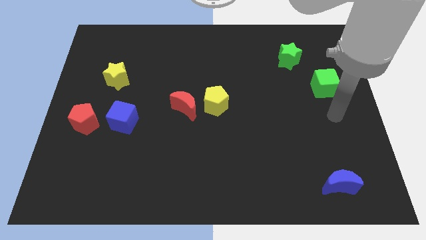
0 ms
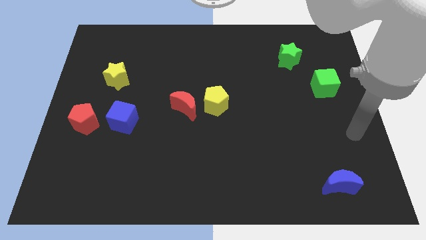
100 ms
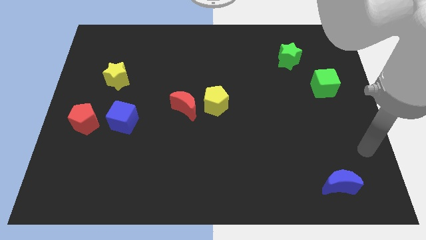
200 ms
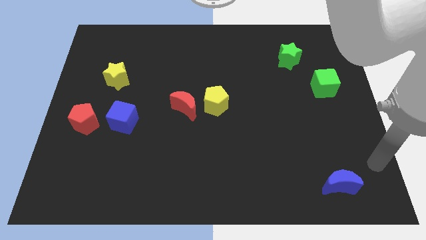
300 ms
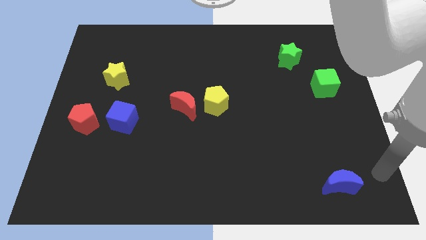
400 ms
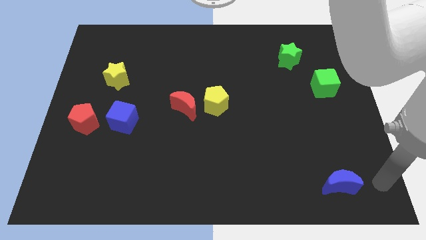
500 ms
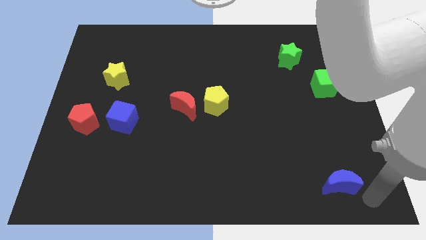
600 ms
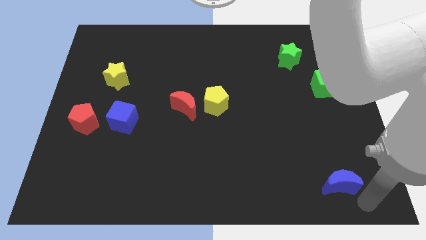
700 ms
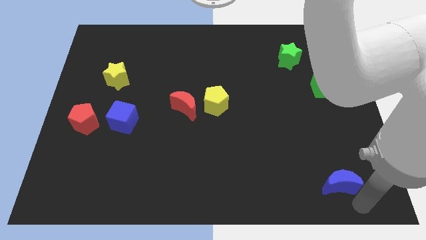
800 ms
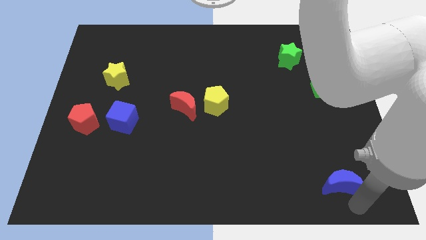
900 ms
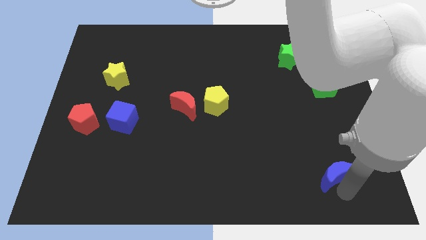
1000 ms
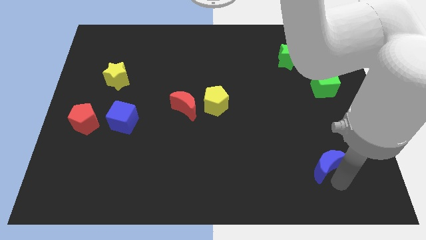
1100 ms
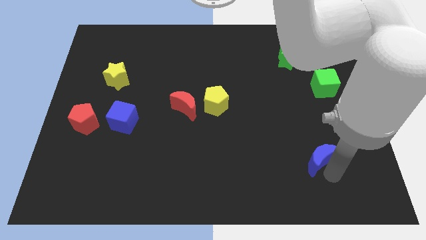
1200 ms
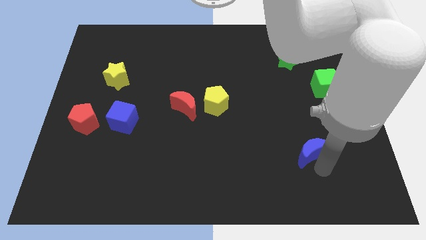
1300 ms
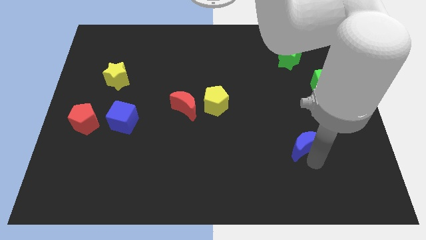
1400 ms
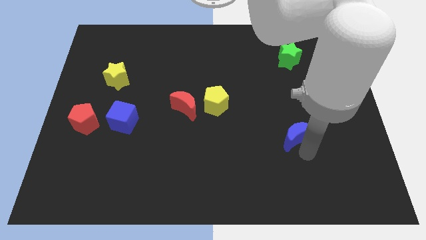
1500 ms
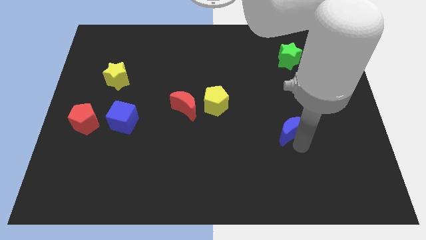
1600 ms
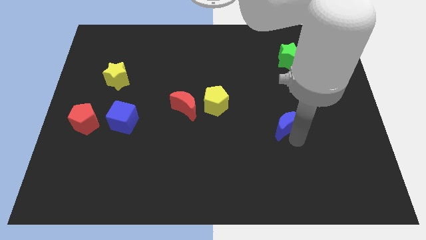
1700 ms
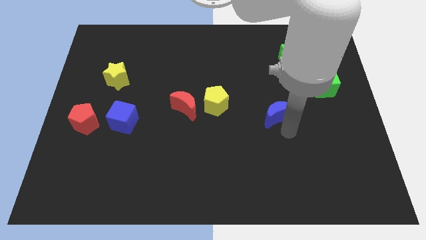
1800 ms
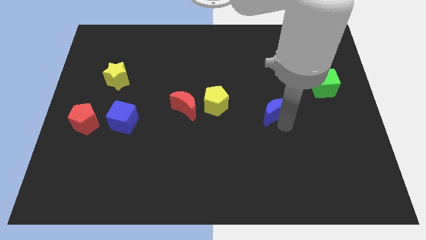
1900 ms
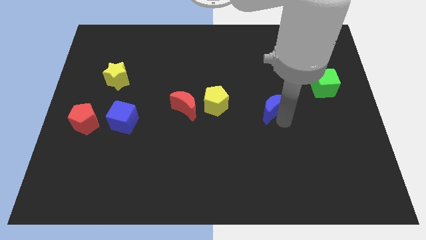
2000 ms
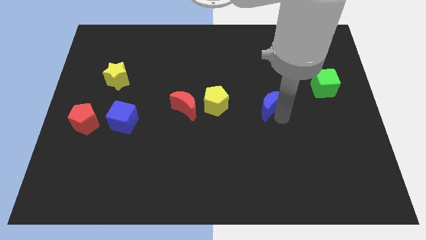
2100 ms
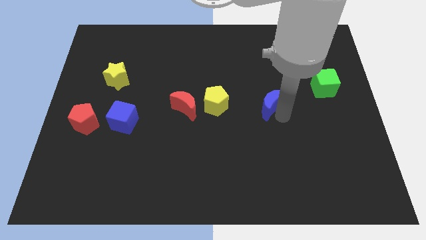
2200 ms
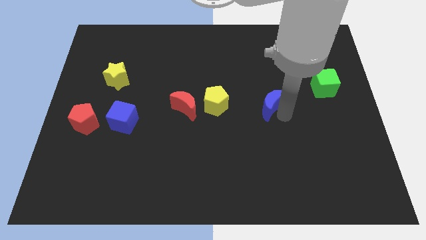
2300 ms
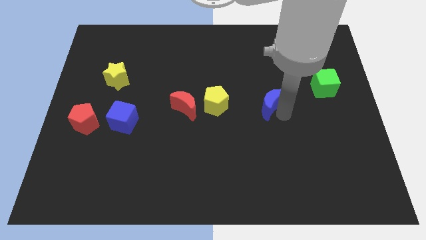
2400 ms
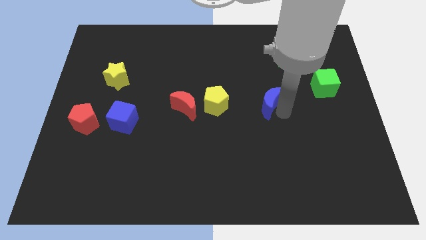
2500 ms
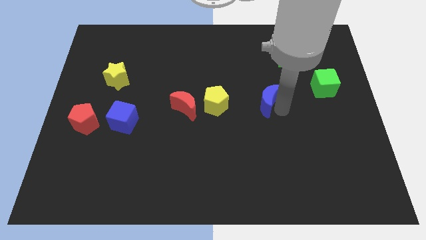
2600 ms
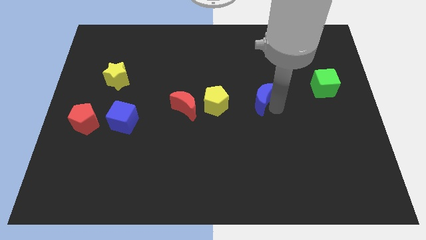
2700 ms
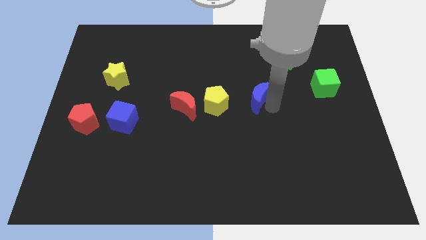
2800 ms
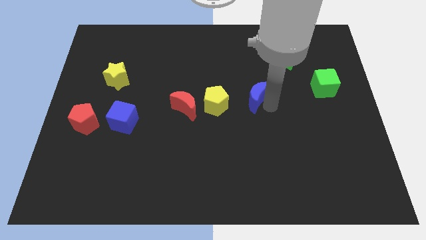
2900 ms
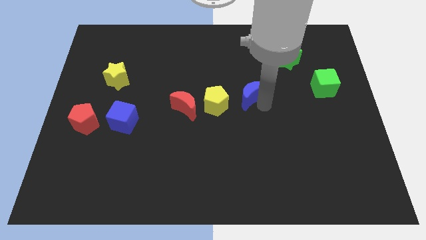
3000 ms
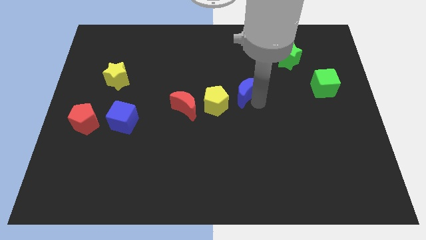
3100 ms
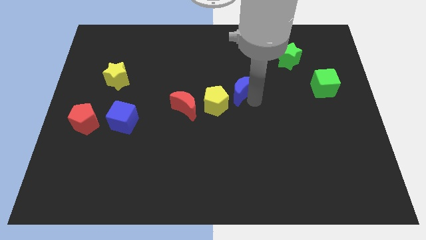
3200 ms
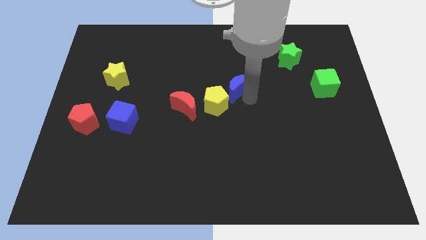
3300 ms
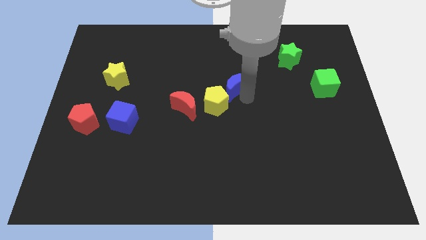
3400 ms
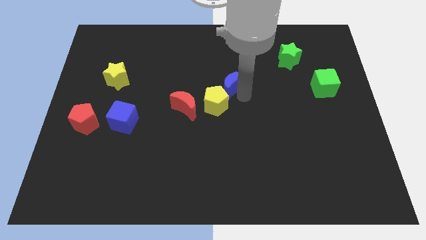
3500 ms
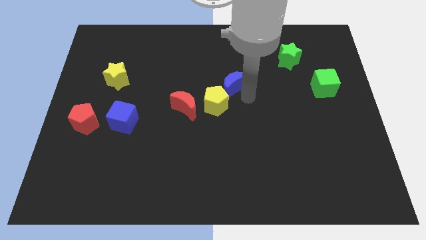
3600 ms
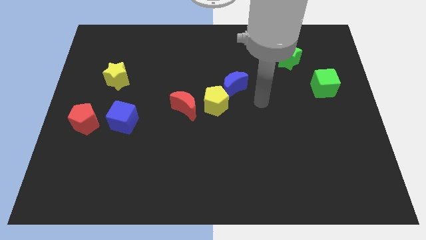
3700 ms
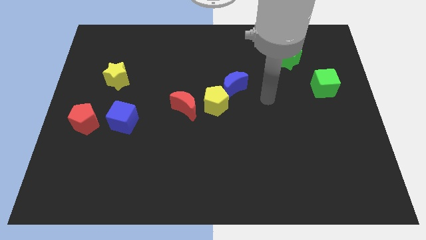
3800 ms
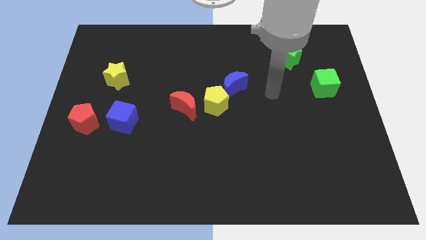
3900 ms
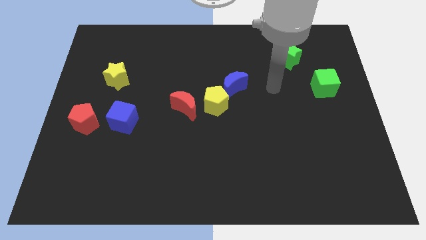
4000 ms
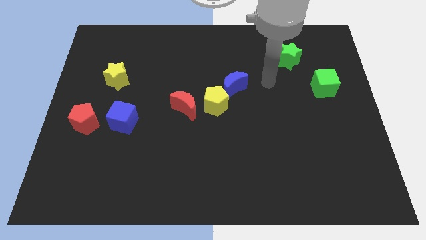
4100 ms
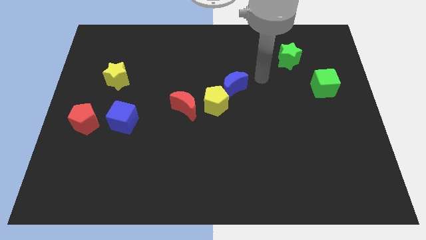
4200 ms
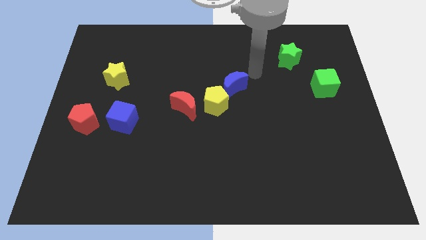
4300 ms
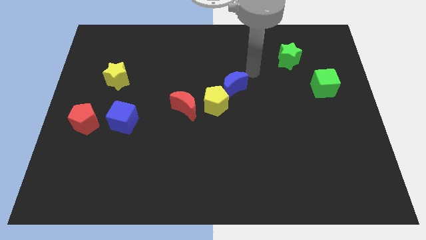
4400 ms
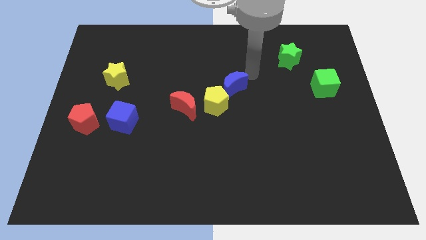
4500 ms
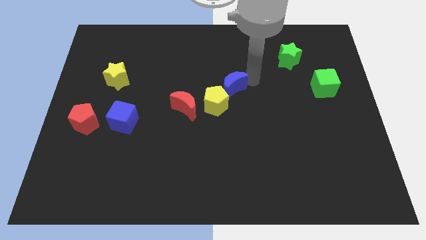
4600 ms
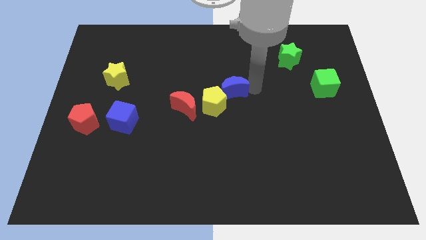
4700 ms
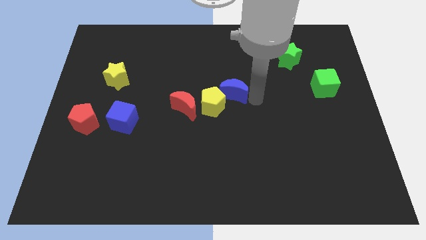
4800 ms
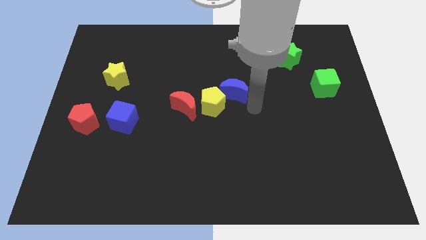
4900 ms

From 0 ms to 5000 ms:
move the blue moon close to the yellow pentagon

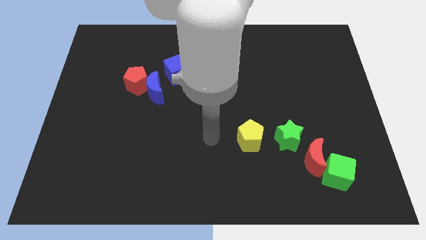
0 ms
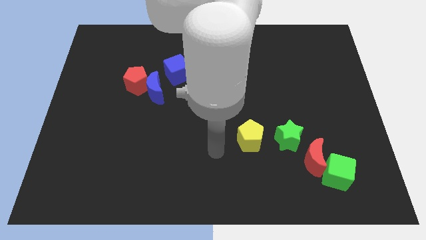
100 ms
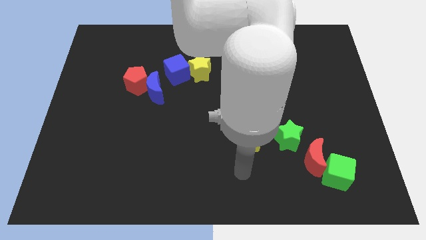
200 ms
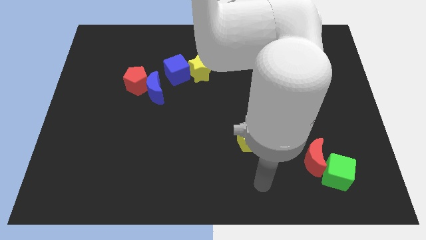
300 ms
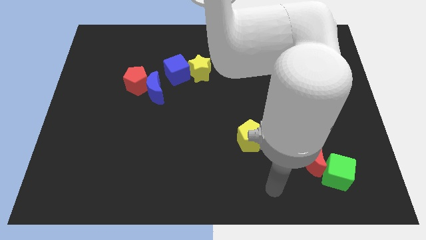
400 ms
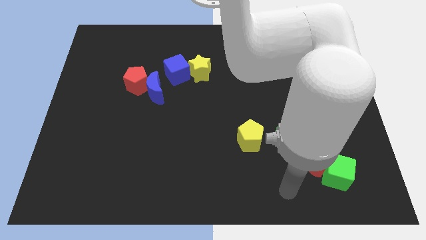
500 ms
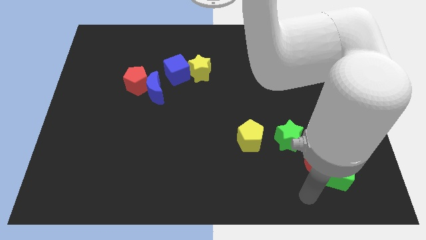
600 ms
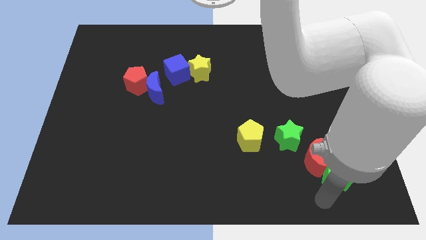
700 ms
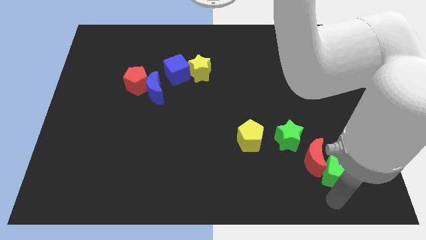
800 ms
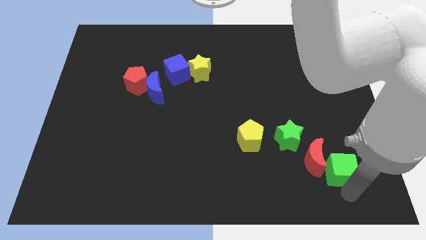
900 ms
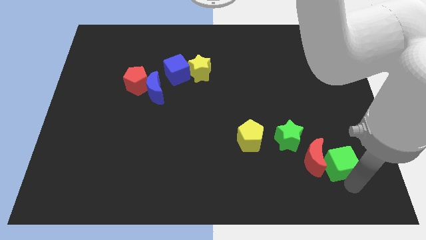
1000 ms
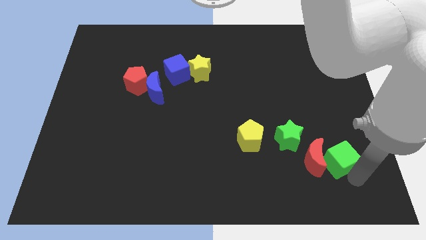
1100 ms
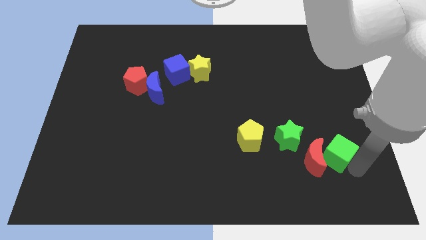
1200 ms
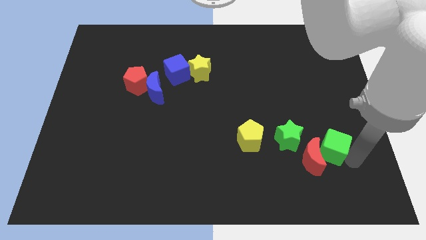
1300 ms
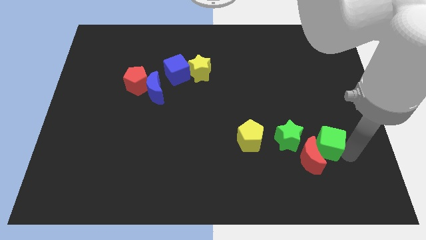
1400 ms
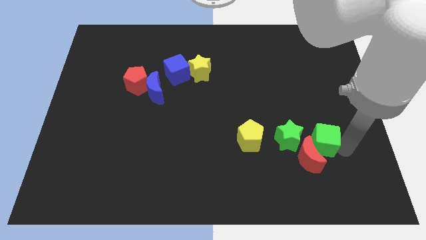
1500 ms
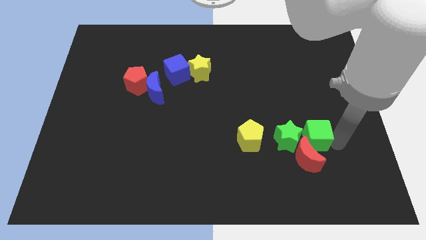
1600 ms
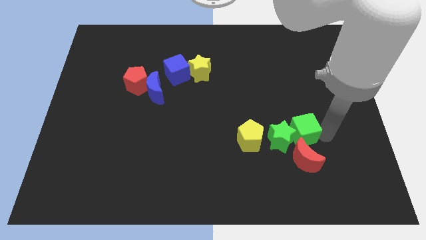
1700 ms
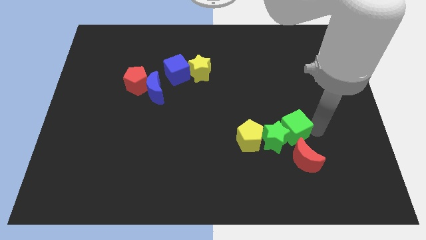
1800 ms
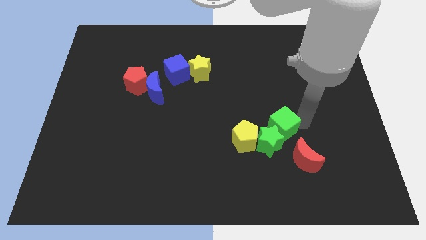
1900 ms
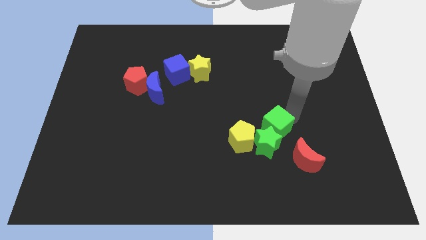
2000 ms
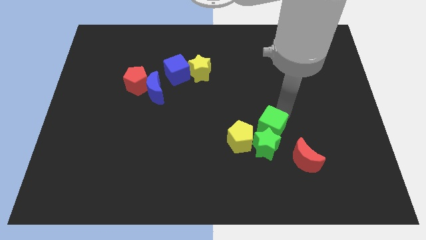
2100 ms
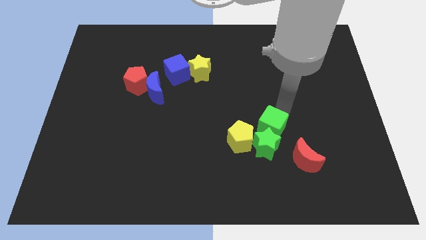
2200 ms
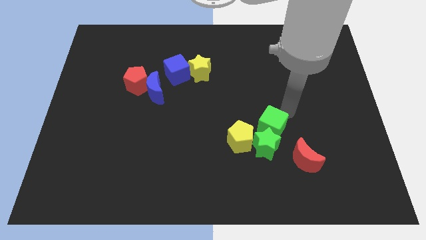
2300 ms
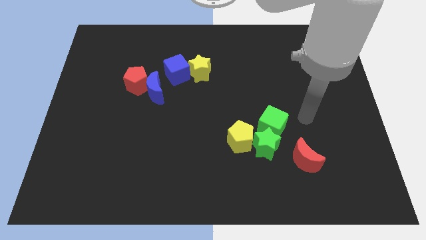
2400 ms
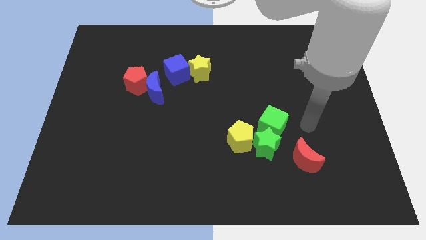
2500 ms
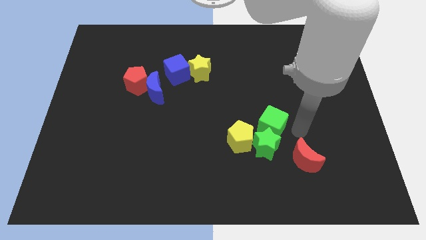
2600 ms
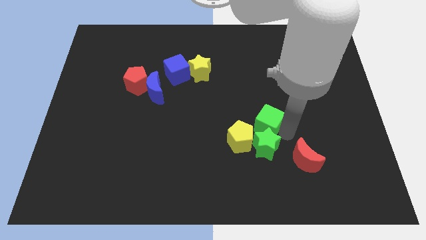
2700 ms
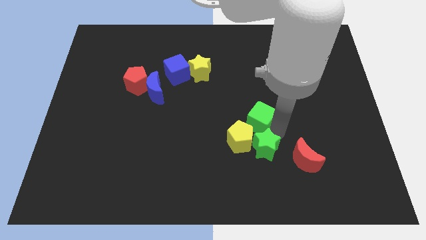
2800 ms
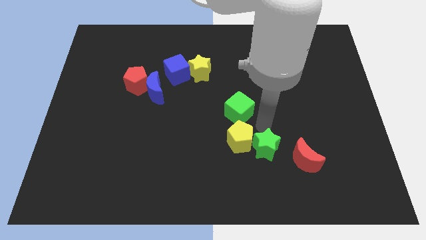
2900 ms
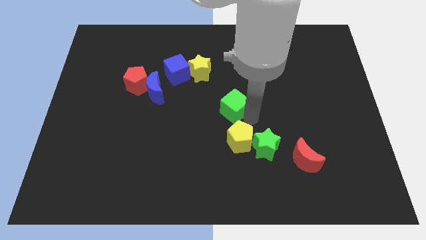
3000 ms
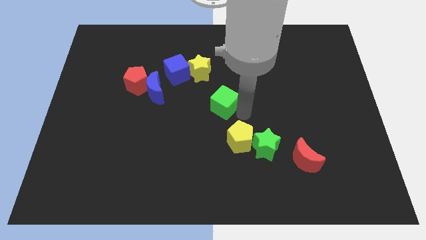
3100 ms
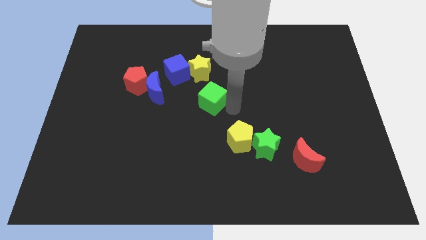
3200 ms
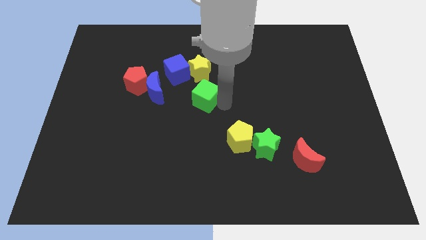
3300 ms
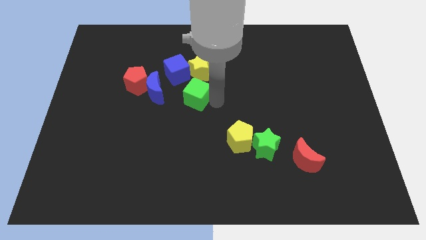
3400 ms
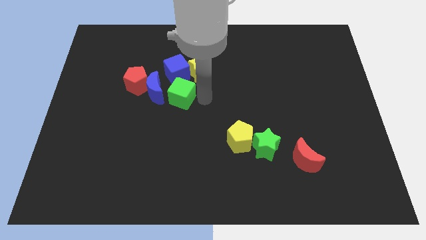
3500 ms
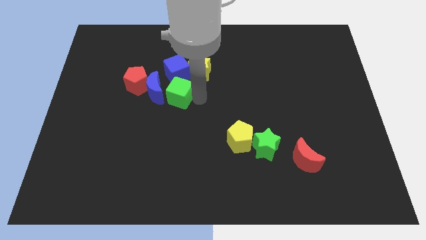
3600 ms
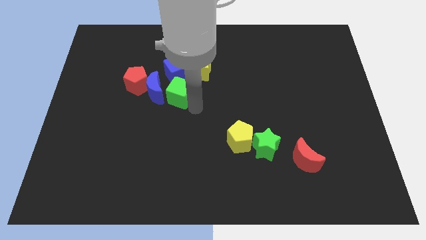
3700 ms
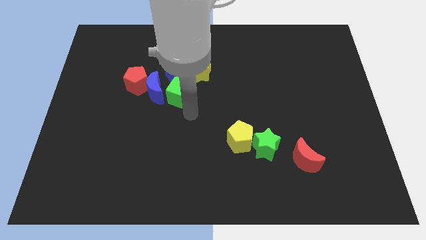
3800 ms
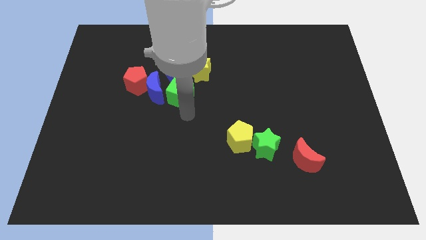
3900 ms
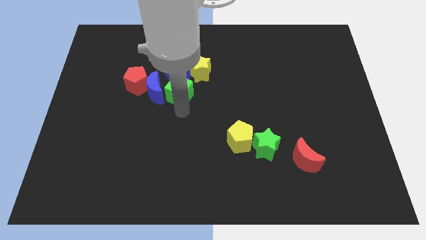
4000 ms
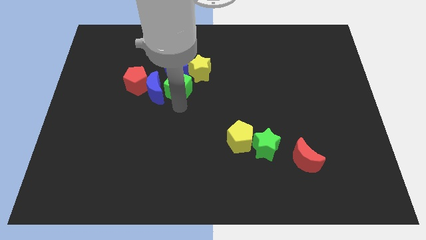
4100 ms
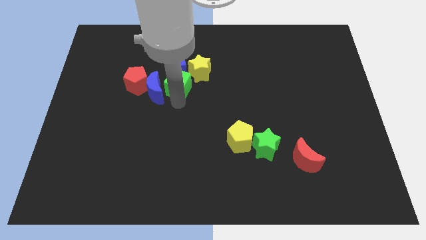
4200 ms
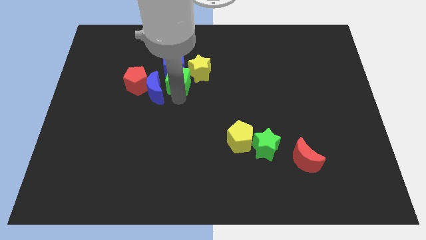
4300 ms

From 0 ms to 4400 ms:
move the green cube close to the blue cube
